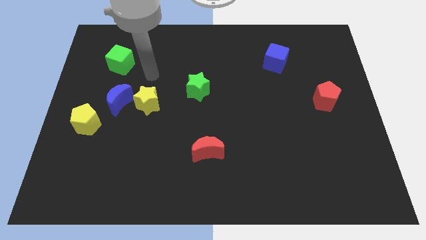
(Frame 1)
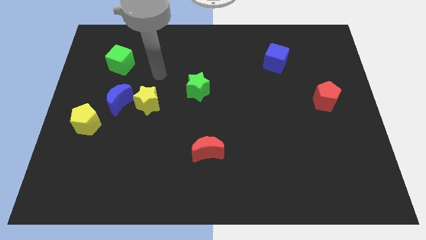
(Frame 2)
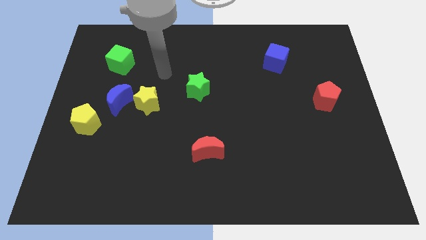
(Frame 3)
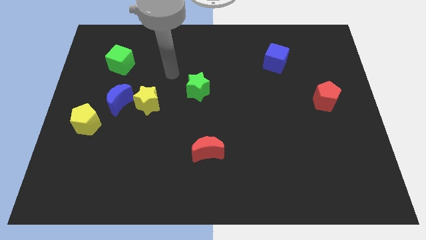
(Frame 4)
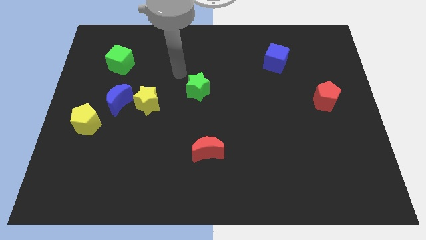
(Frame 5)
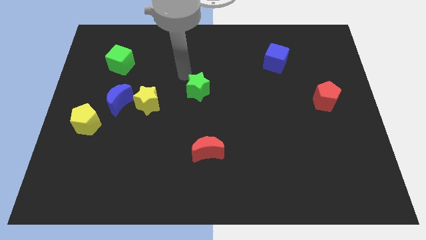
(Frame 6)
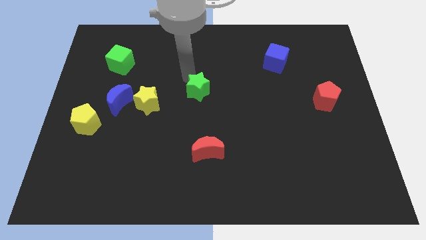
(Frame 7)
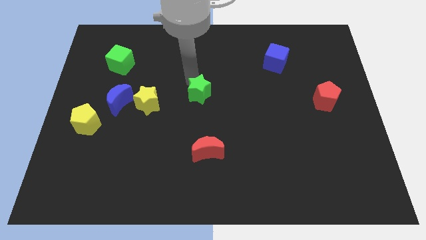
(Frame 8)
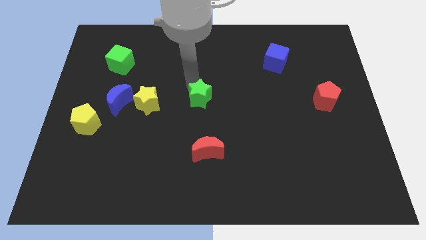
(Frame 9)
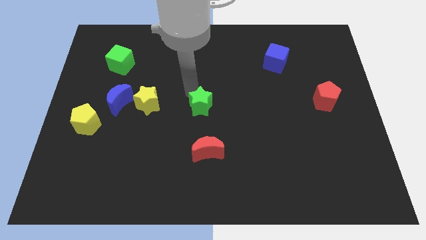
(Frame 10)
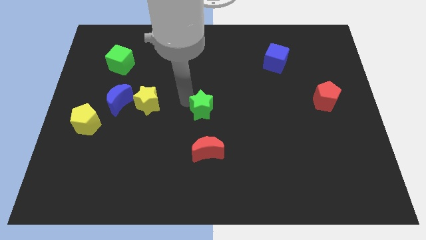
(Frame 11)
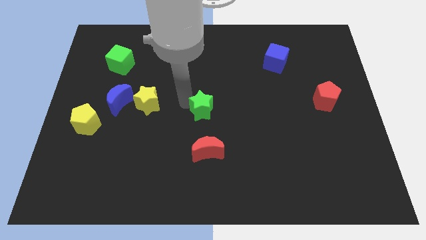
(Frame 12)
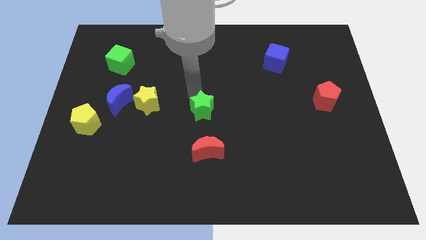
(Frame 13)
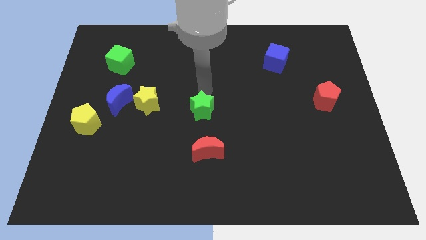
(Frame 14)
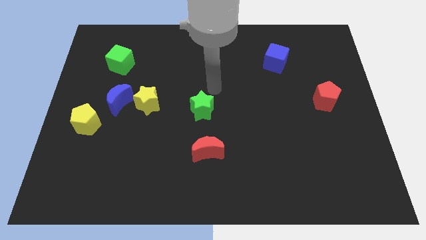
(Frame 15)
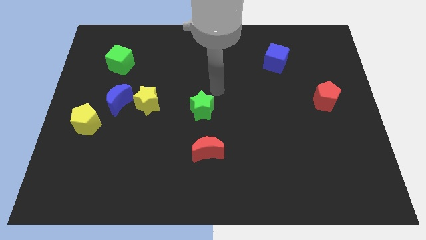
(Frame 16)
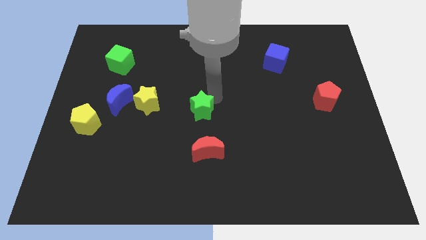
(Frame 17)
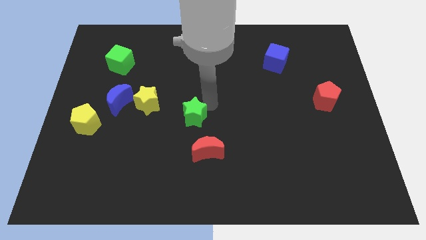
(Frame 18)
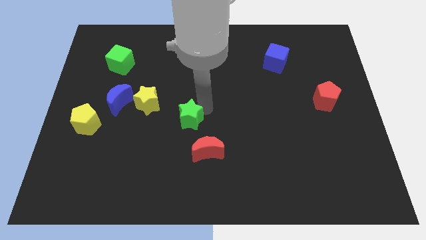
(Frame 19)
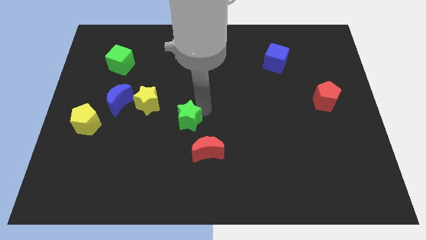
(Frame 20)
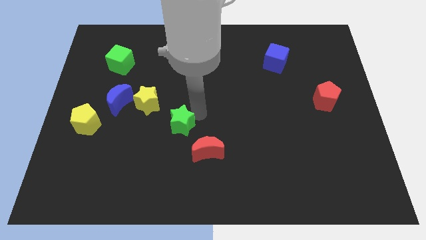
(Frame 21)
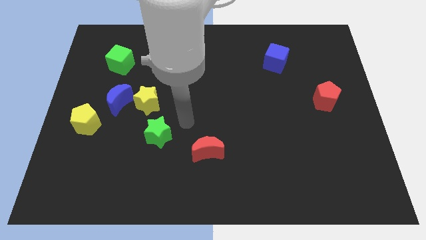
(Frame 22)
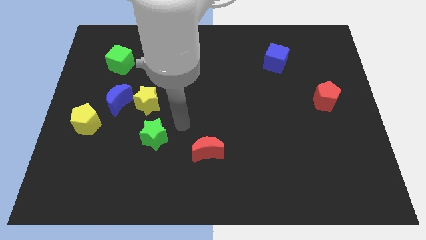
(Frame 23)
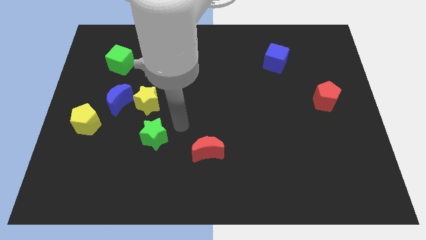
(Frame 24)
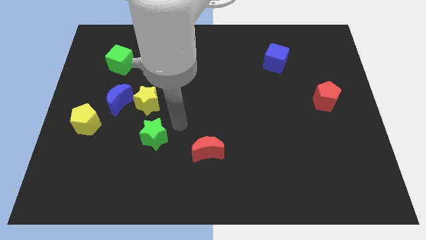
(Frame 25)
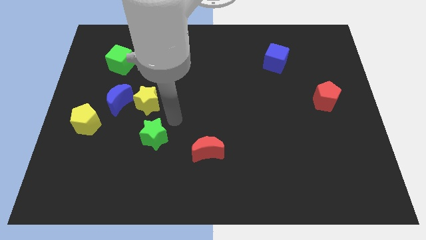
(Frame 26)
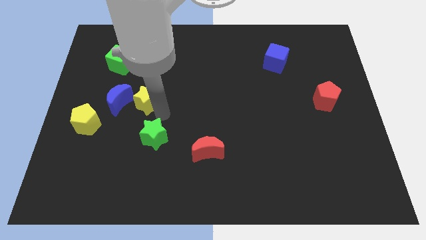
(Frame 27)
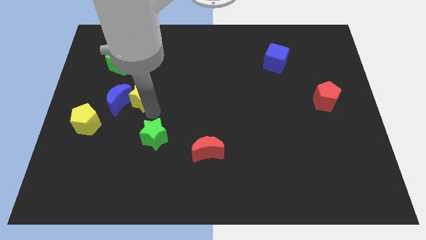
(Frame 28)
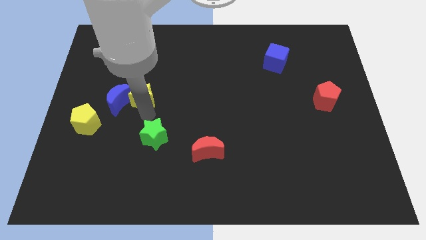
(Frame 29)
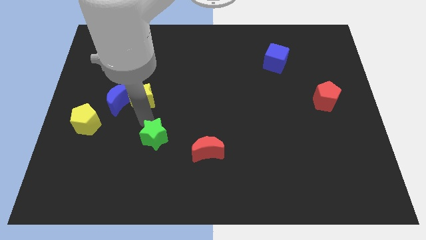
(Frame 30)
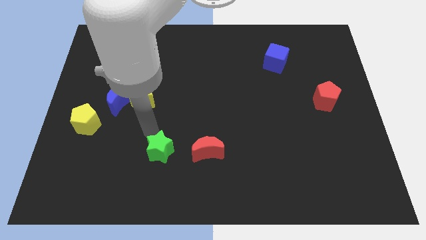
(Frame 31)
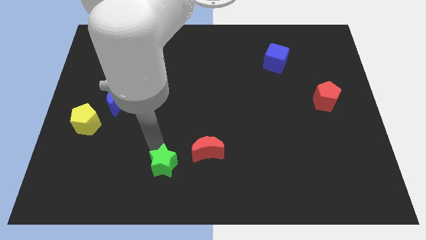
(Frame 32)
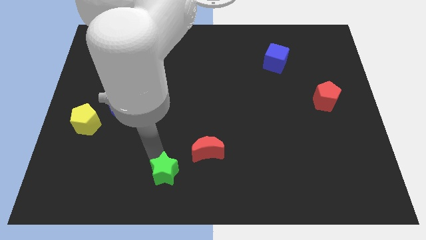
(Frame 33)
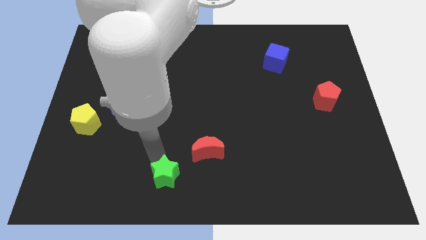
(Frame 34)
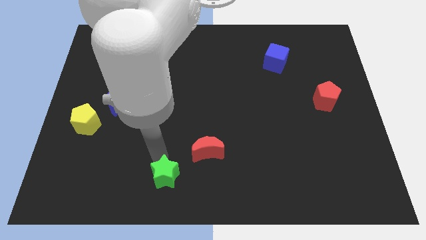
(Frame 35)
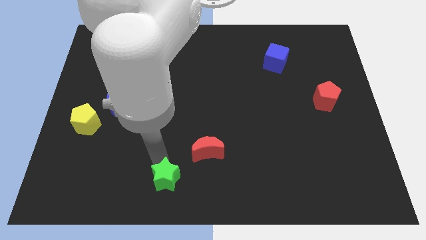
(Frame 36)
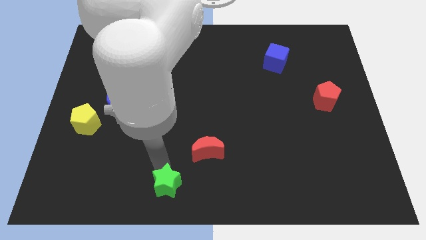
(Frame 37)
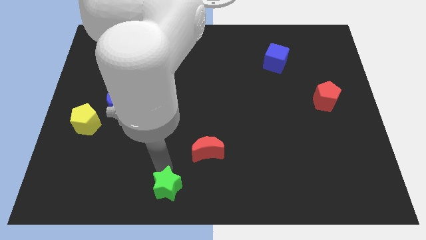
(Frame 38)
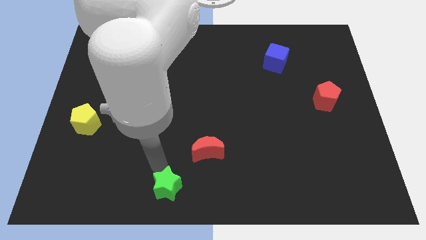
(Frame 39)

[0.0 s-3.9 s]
move the green star to bottom center

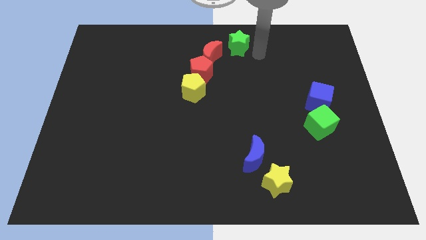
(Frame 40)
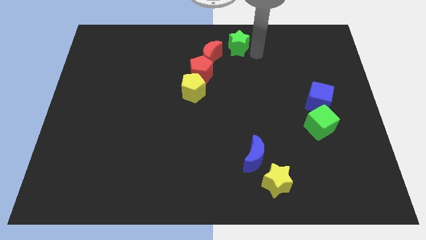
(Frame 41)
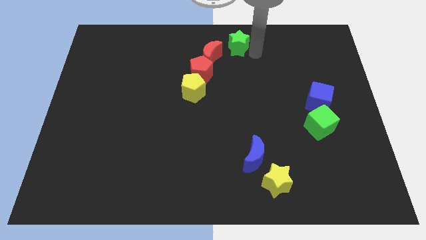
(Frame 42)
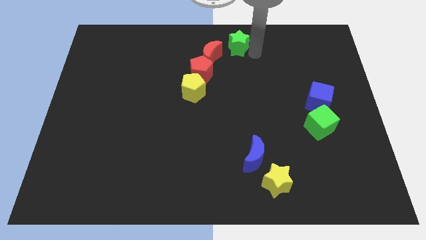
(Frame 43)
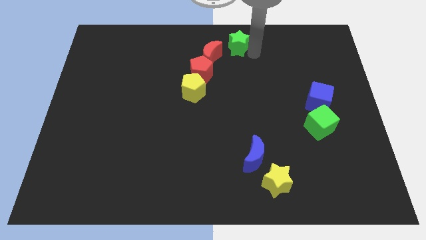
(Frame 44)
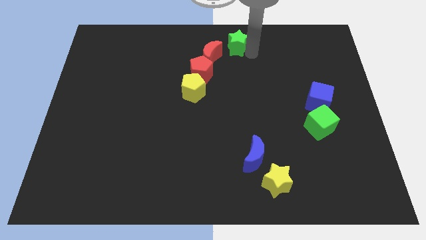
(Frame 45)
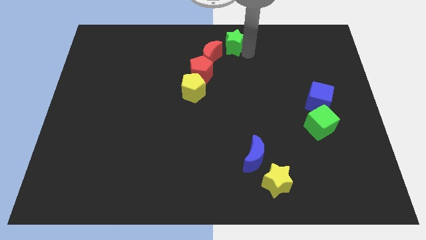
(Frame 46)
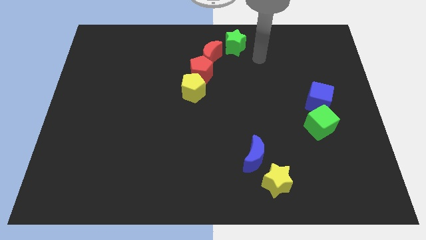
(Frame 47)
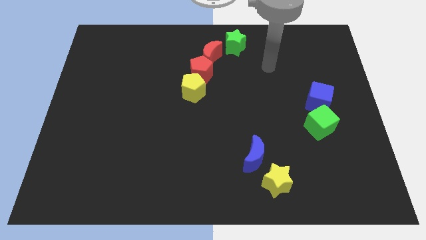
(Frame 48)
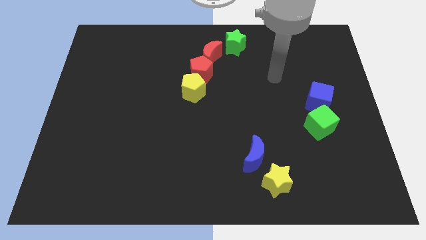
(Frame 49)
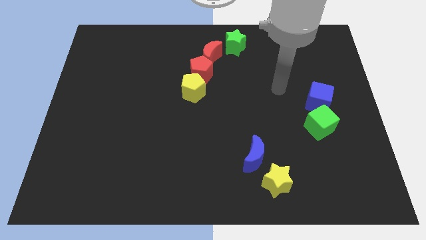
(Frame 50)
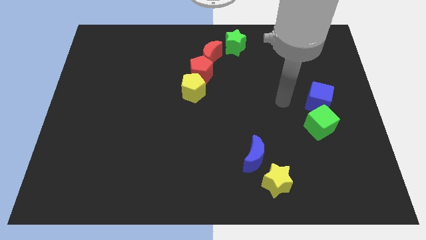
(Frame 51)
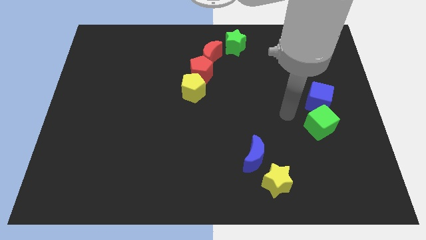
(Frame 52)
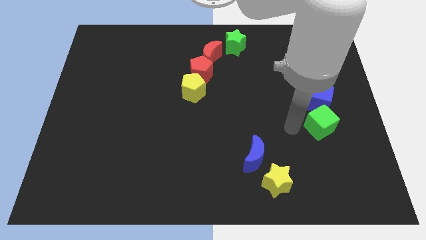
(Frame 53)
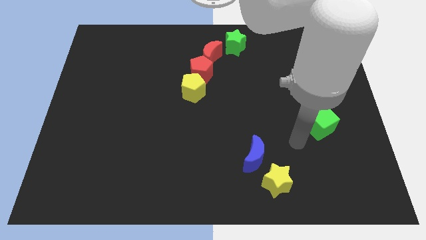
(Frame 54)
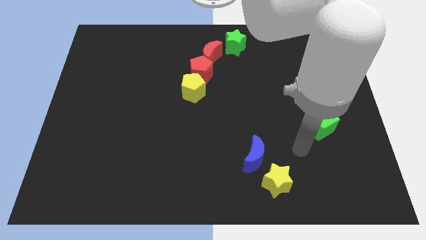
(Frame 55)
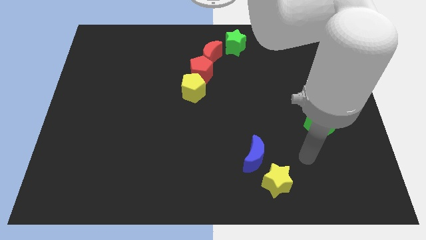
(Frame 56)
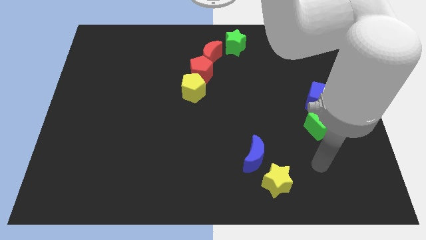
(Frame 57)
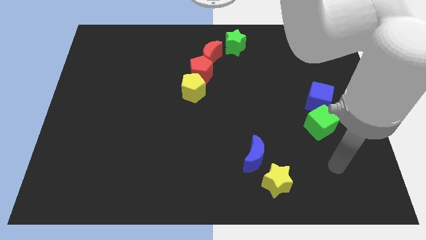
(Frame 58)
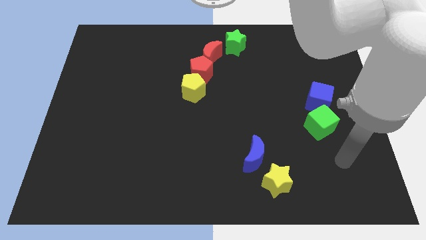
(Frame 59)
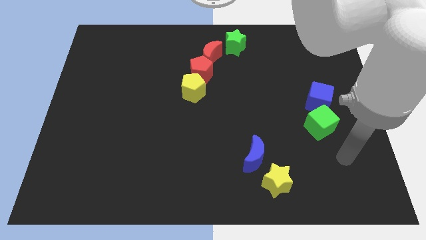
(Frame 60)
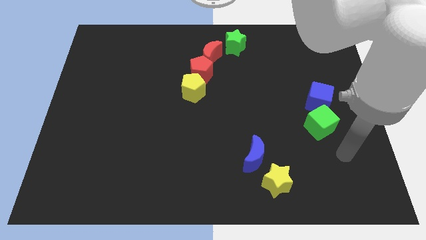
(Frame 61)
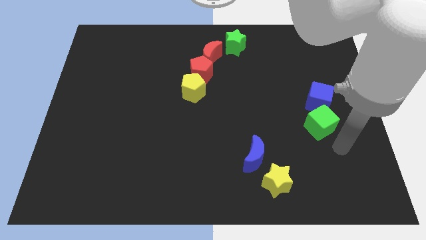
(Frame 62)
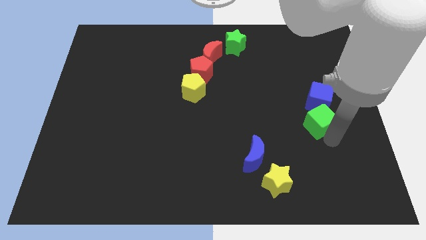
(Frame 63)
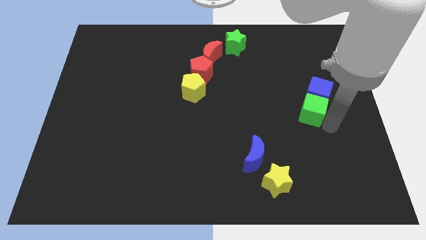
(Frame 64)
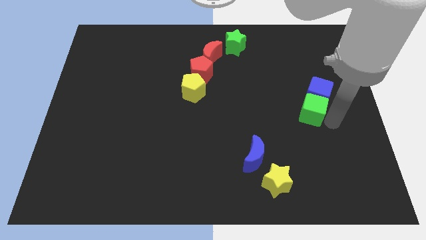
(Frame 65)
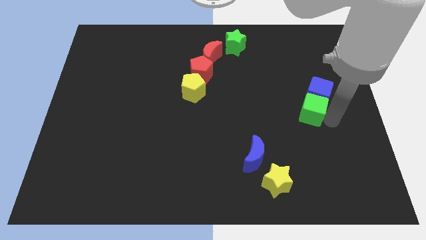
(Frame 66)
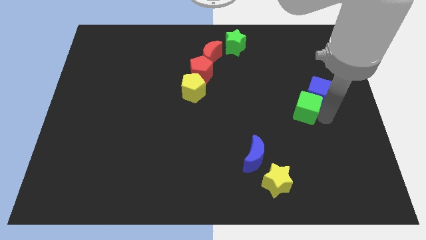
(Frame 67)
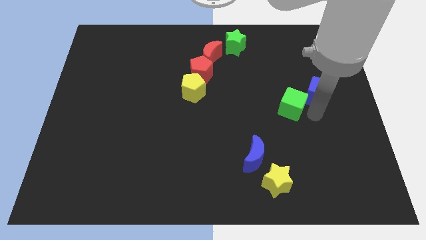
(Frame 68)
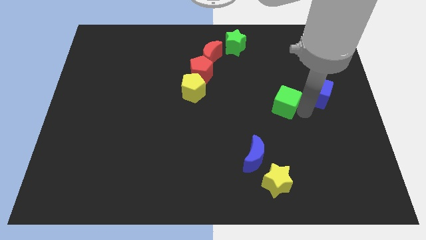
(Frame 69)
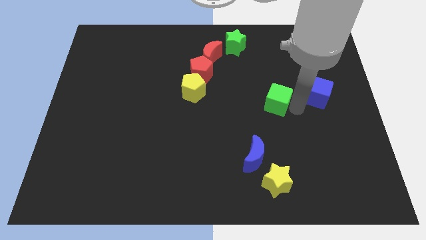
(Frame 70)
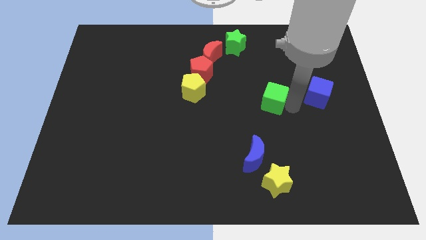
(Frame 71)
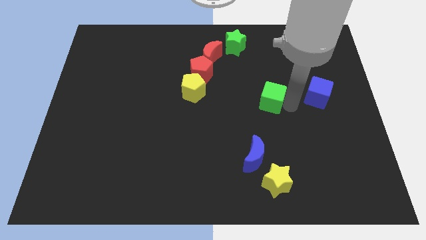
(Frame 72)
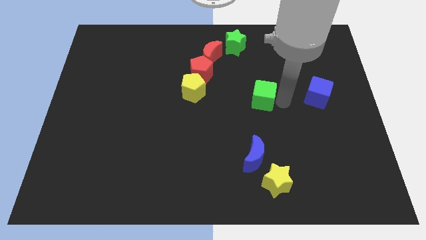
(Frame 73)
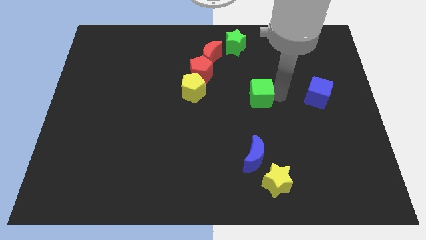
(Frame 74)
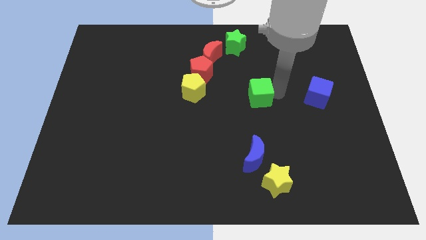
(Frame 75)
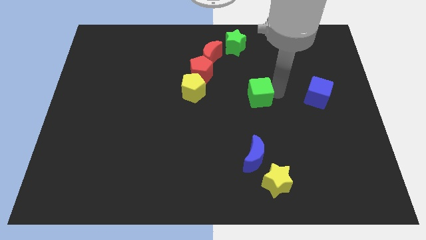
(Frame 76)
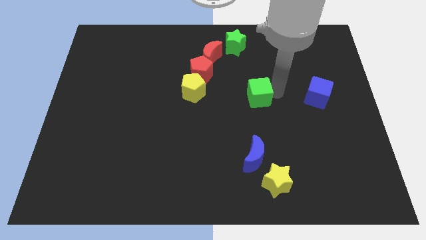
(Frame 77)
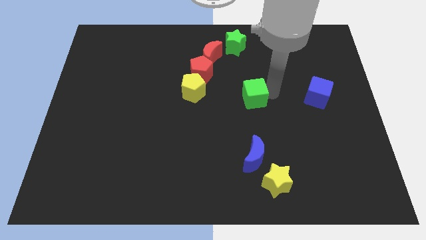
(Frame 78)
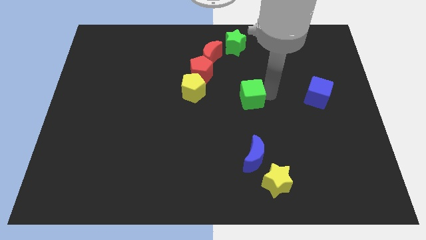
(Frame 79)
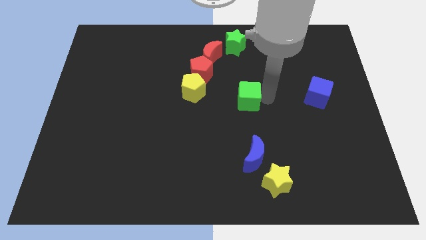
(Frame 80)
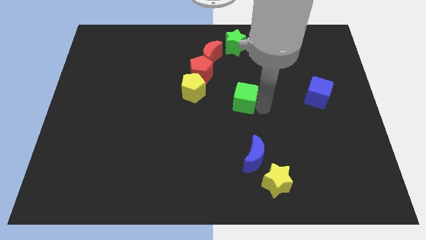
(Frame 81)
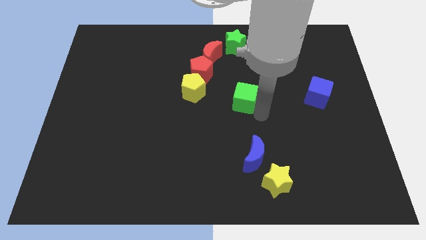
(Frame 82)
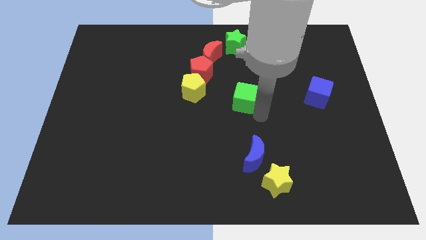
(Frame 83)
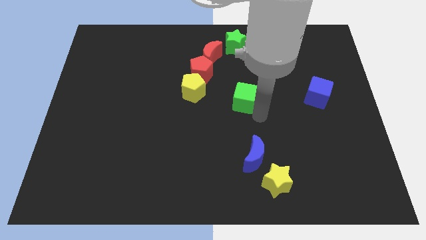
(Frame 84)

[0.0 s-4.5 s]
separate the green cube from the blue cube

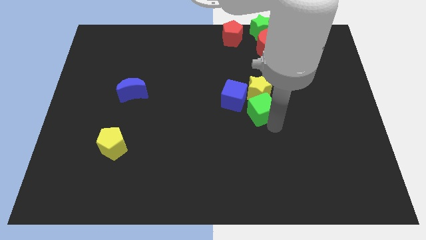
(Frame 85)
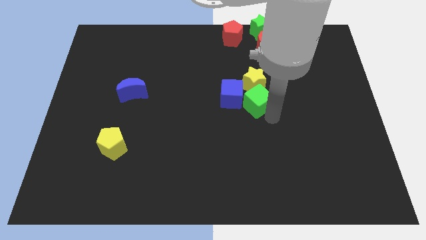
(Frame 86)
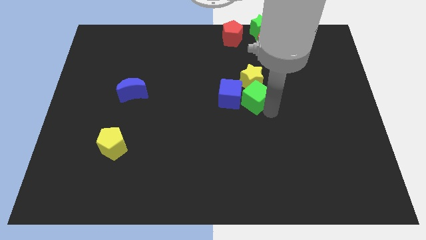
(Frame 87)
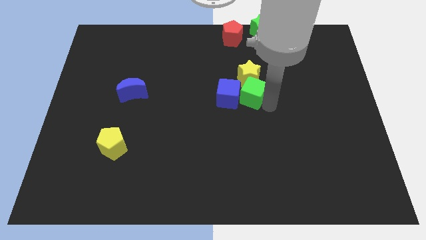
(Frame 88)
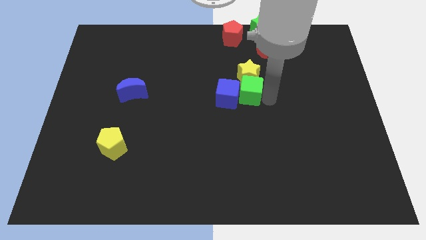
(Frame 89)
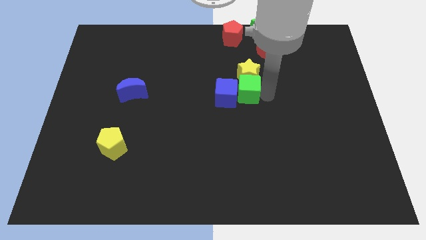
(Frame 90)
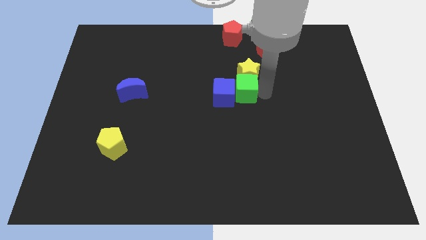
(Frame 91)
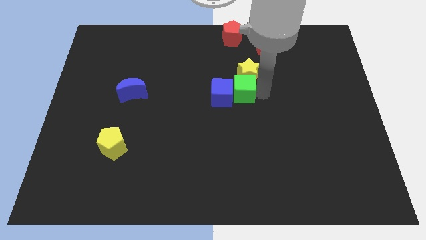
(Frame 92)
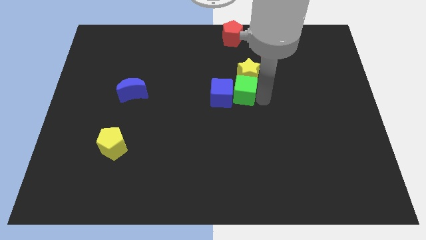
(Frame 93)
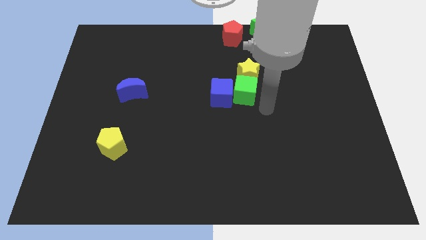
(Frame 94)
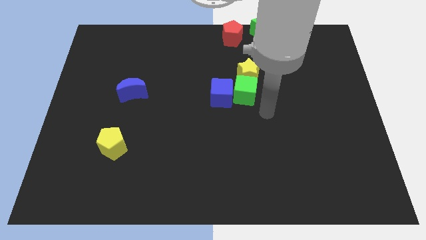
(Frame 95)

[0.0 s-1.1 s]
push the green cube to the top
